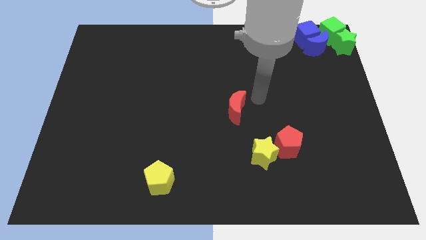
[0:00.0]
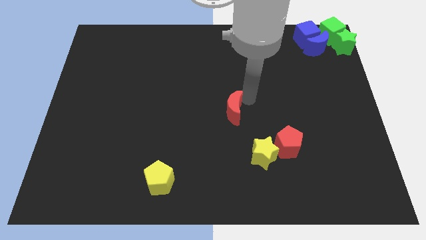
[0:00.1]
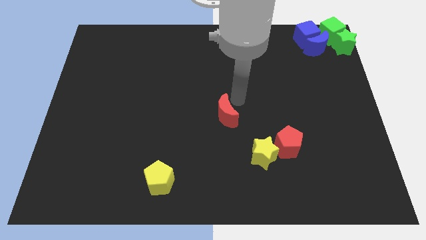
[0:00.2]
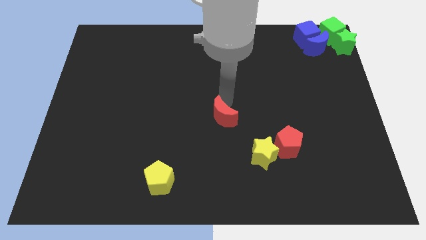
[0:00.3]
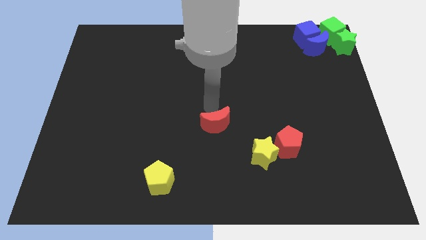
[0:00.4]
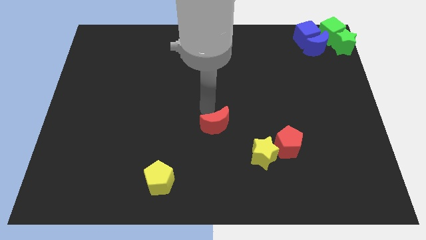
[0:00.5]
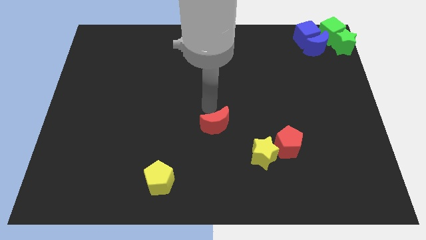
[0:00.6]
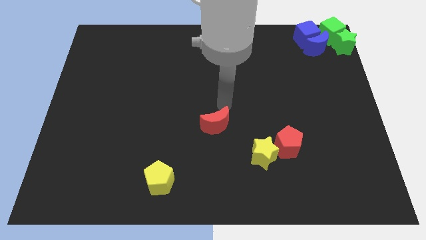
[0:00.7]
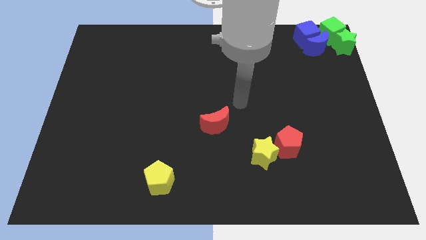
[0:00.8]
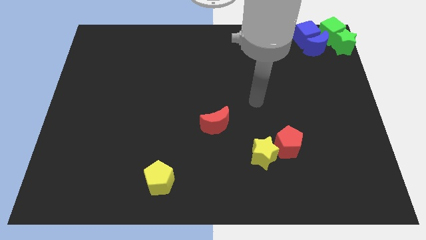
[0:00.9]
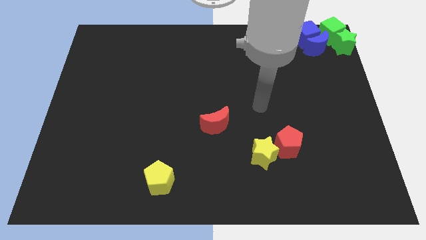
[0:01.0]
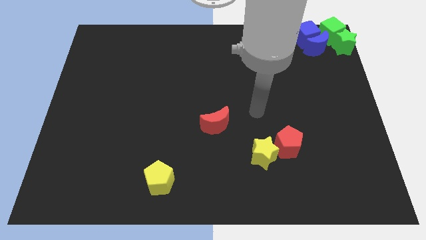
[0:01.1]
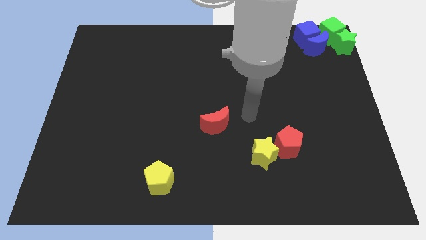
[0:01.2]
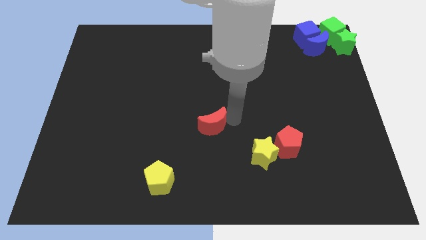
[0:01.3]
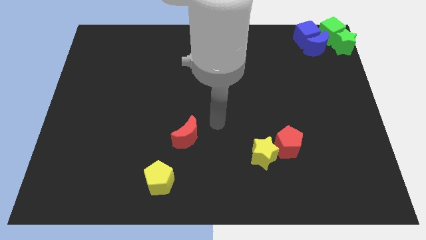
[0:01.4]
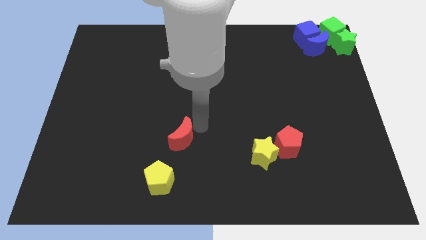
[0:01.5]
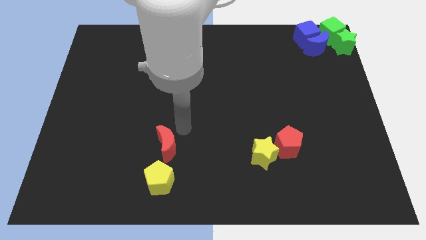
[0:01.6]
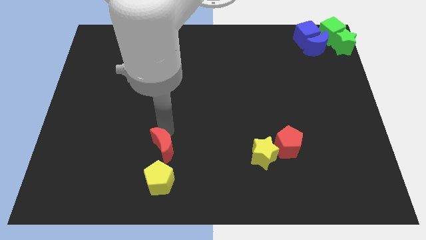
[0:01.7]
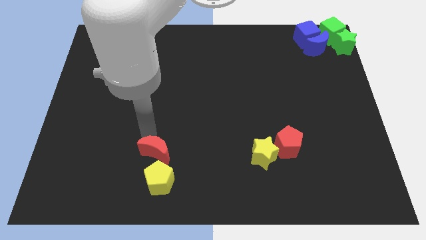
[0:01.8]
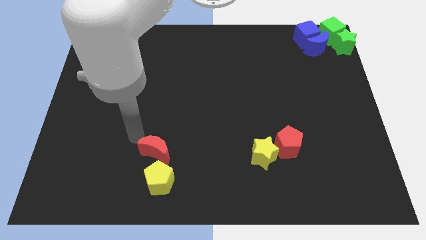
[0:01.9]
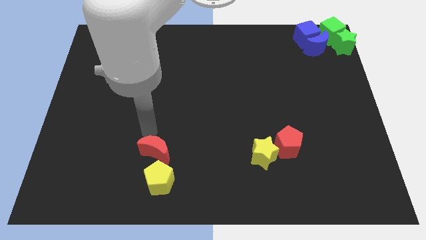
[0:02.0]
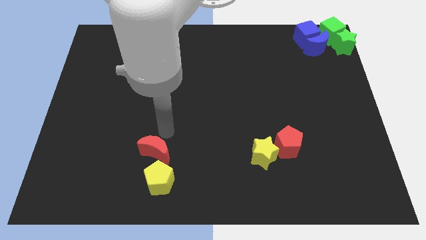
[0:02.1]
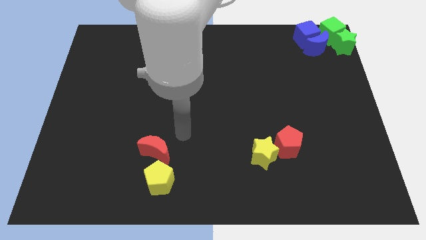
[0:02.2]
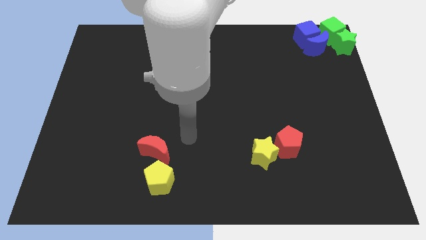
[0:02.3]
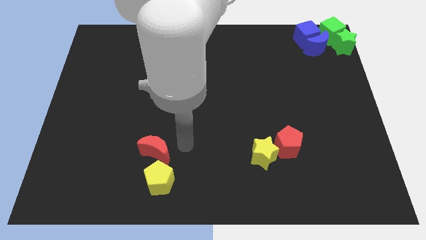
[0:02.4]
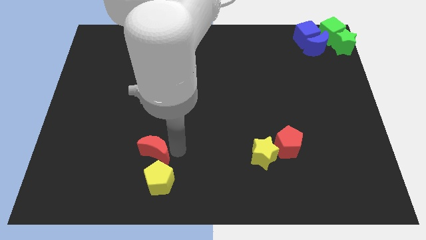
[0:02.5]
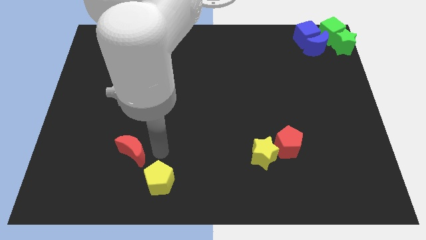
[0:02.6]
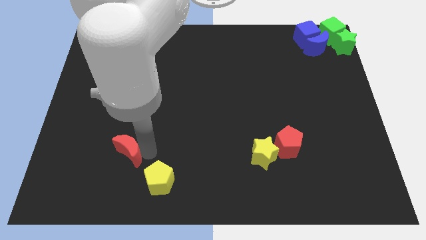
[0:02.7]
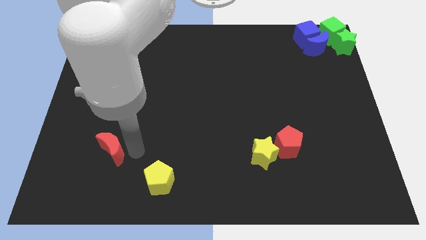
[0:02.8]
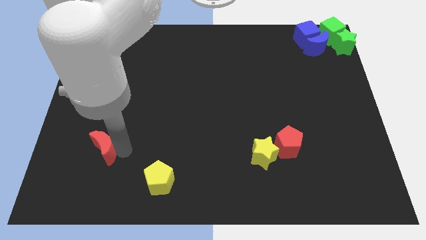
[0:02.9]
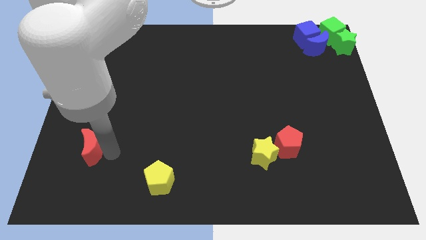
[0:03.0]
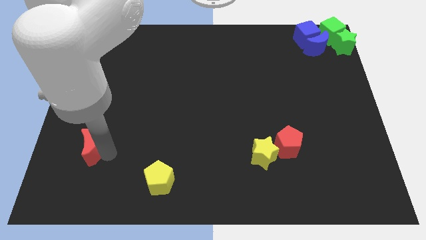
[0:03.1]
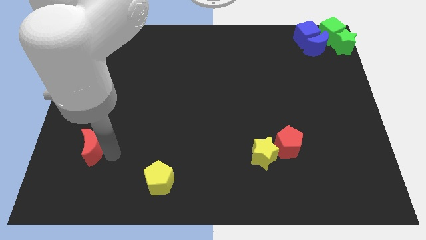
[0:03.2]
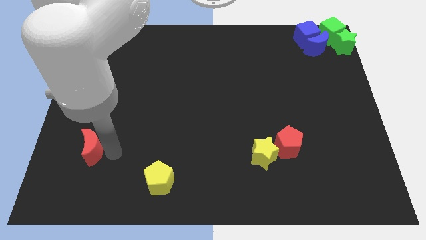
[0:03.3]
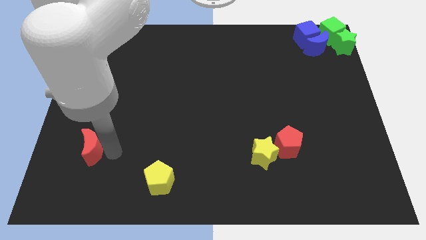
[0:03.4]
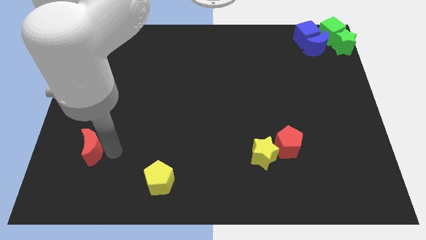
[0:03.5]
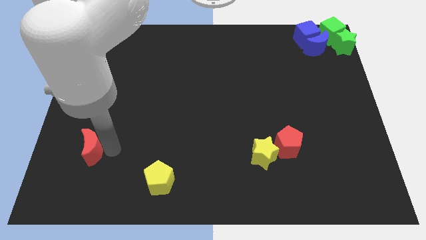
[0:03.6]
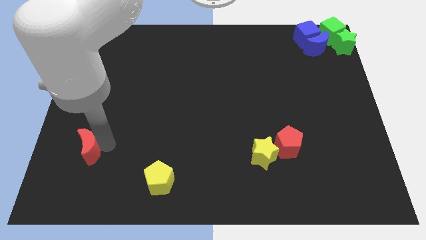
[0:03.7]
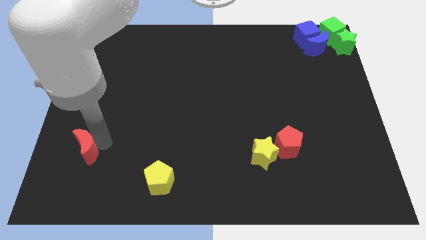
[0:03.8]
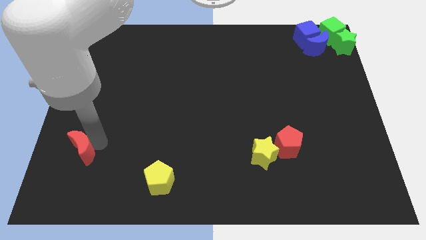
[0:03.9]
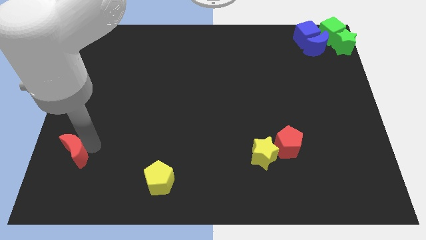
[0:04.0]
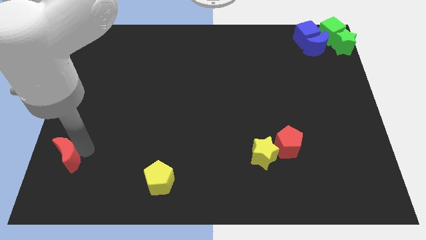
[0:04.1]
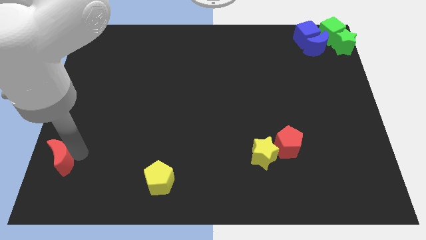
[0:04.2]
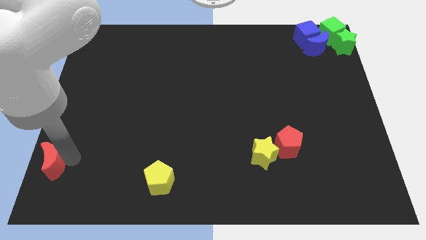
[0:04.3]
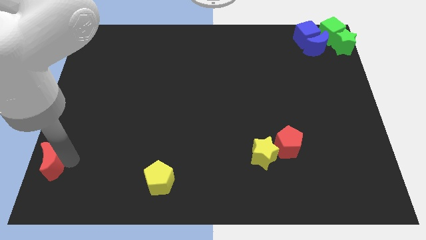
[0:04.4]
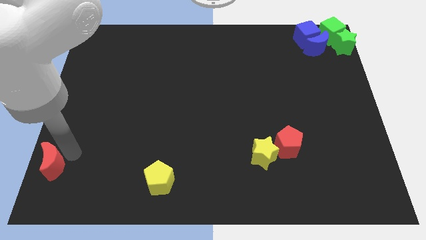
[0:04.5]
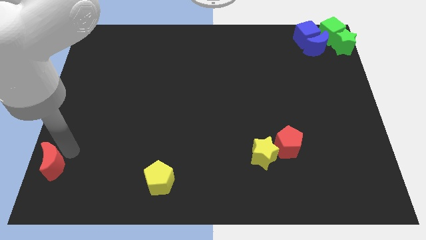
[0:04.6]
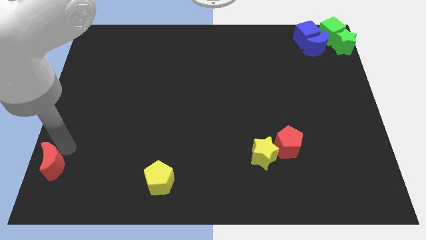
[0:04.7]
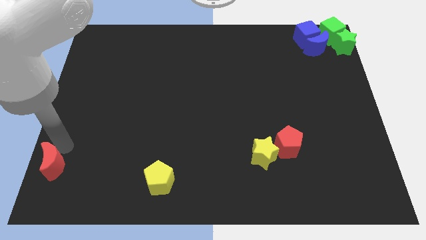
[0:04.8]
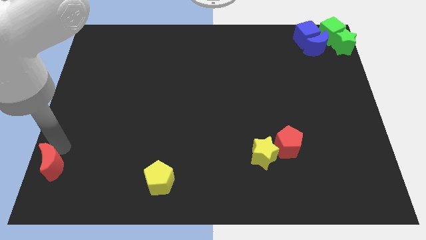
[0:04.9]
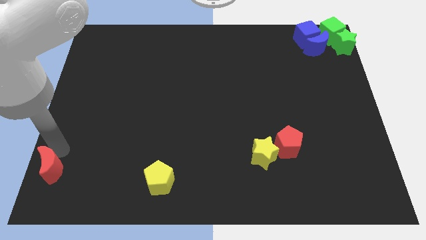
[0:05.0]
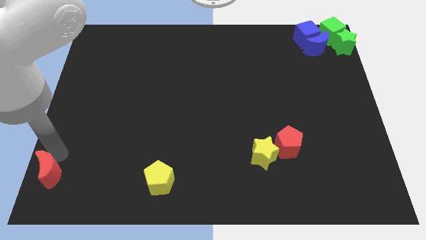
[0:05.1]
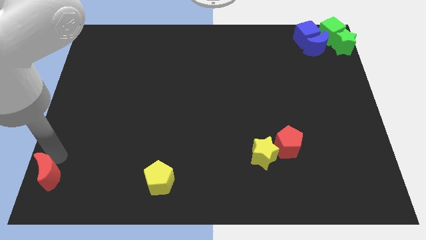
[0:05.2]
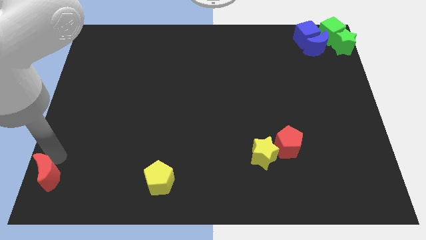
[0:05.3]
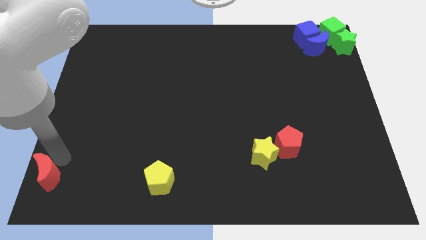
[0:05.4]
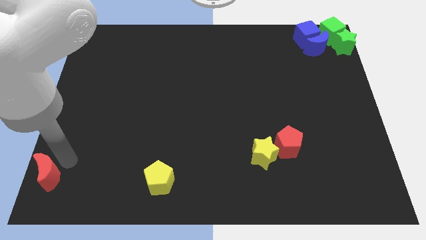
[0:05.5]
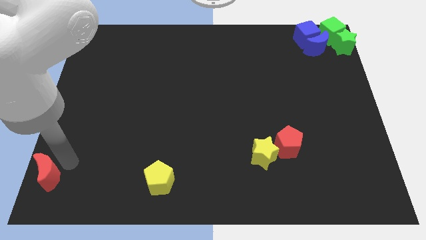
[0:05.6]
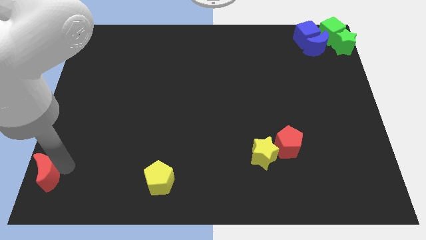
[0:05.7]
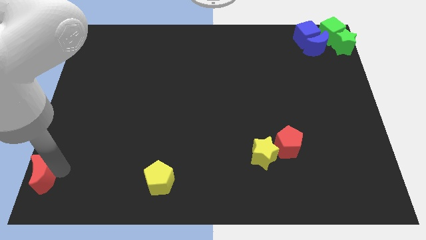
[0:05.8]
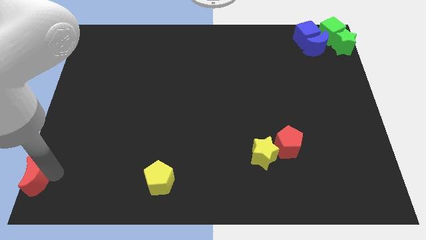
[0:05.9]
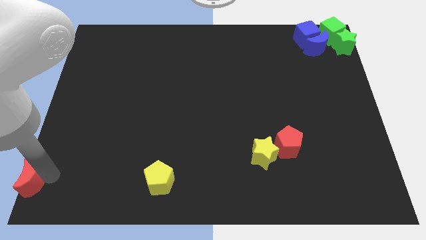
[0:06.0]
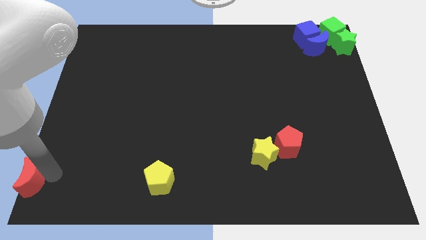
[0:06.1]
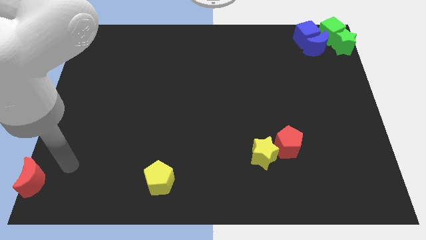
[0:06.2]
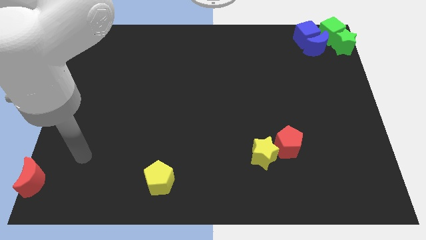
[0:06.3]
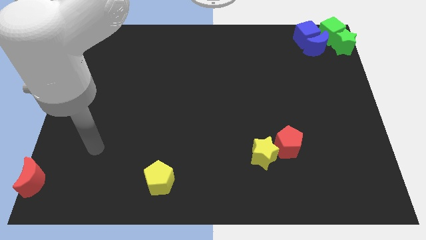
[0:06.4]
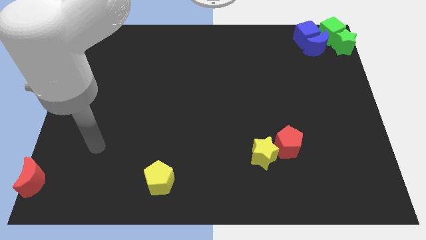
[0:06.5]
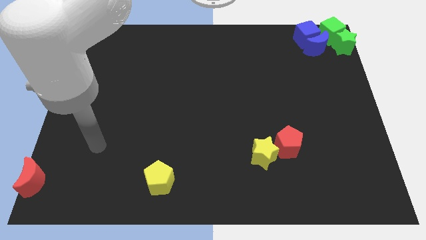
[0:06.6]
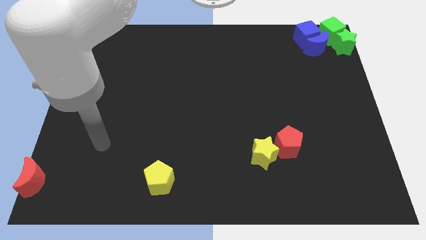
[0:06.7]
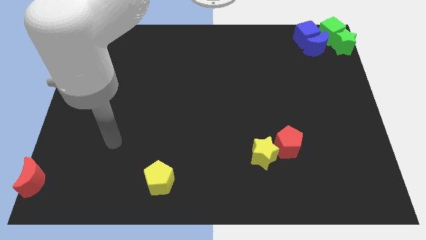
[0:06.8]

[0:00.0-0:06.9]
push the red crescent to the bottom left

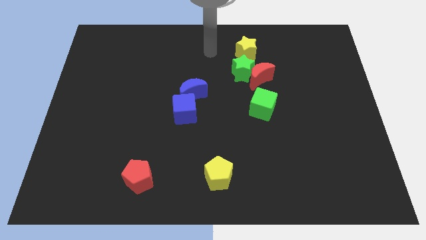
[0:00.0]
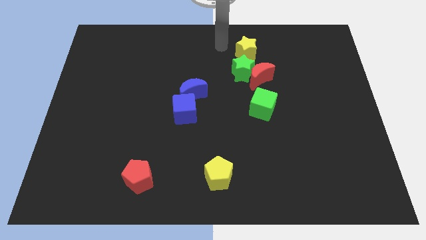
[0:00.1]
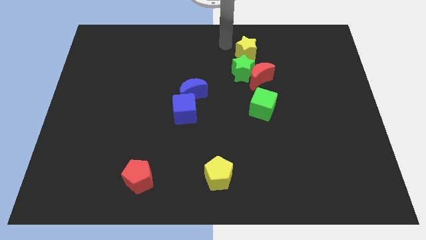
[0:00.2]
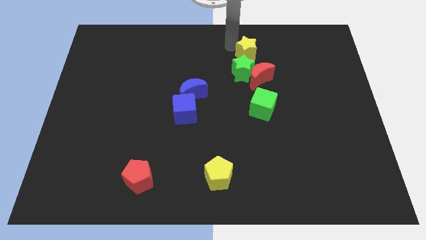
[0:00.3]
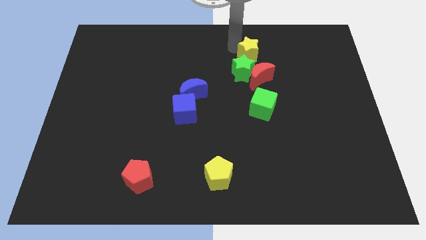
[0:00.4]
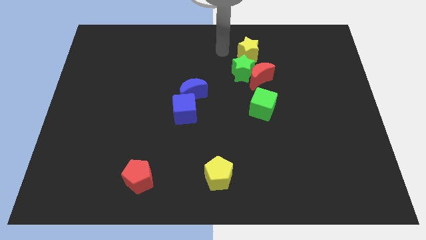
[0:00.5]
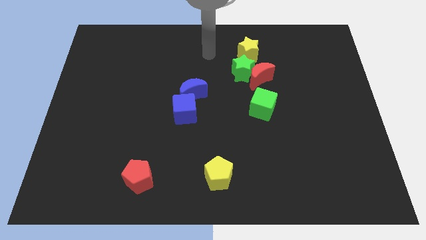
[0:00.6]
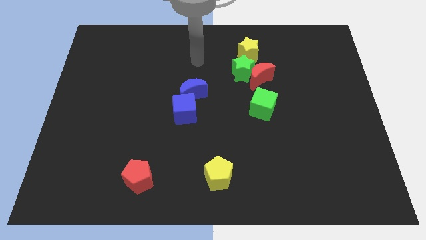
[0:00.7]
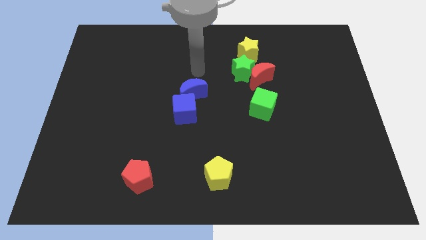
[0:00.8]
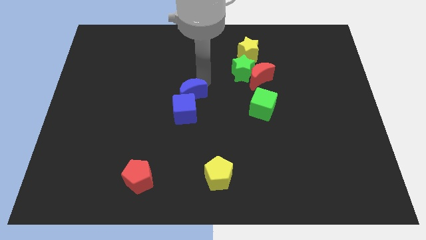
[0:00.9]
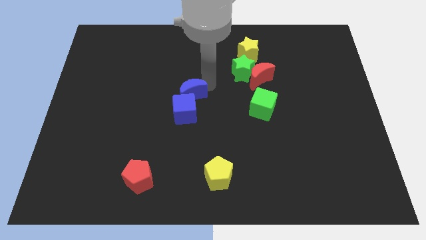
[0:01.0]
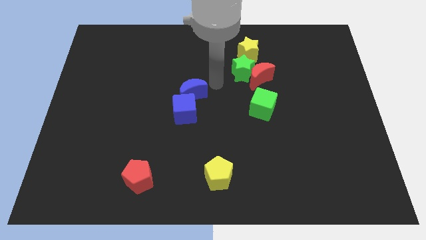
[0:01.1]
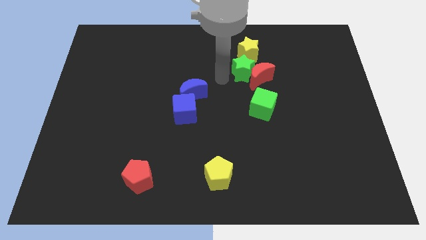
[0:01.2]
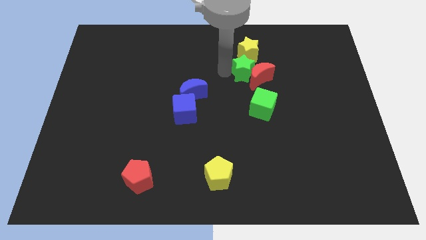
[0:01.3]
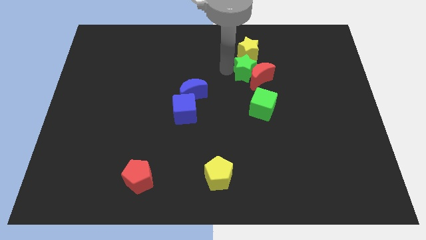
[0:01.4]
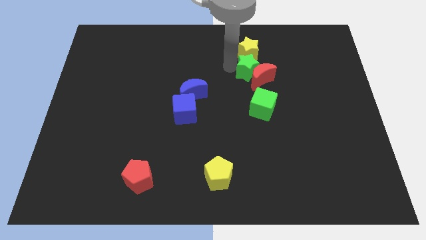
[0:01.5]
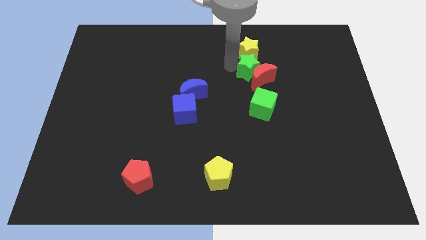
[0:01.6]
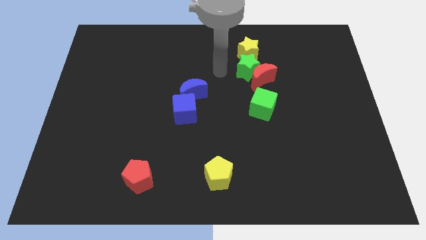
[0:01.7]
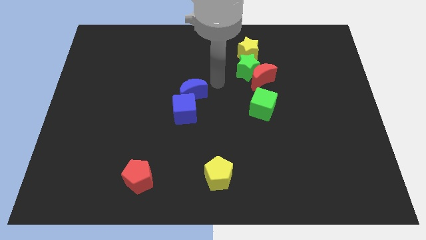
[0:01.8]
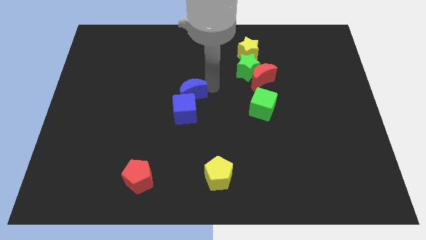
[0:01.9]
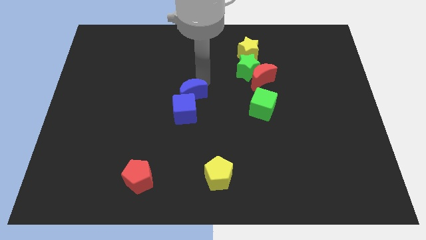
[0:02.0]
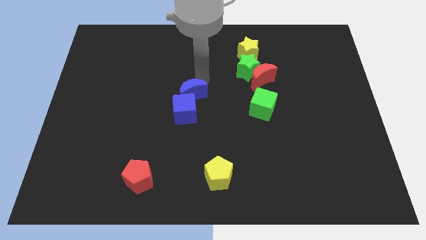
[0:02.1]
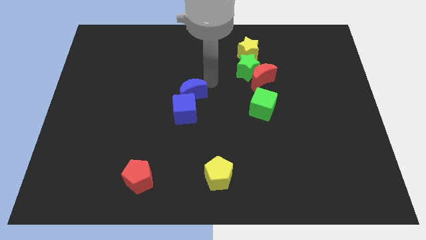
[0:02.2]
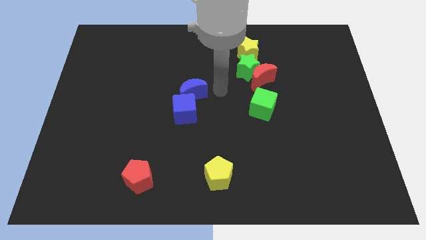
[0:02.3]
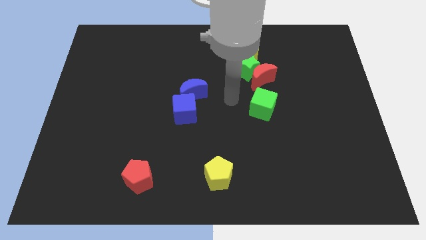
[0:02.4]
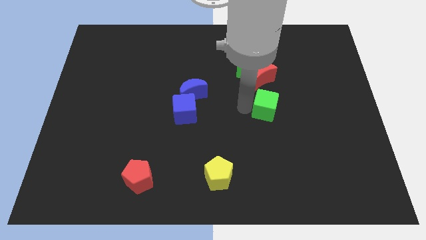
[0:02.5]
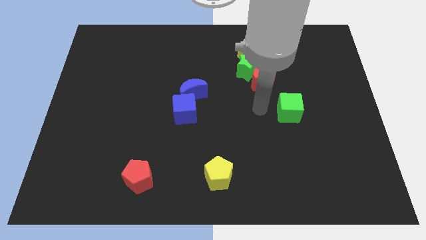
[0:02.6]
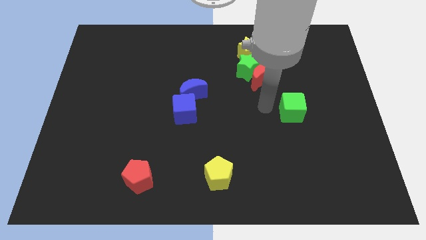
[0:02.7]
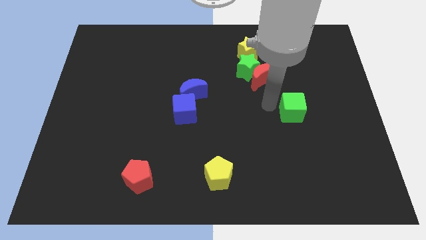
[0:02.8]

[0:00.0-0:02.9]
move green cube slightly right
